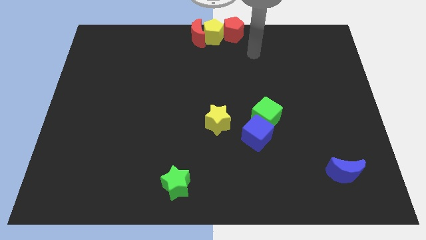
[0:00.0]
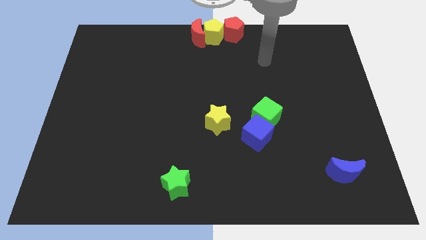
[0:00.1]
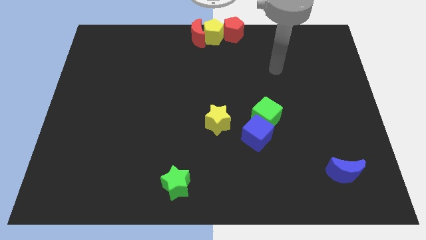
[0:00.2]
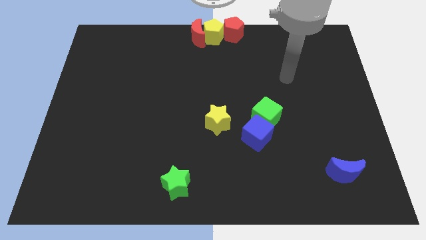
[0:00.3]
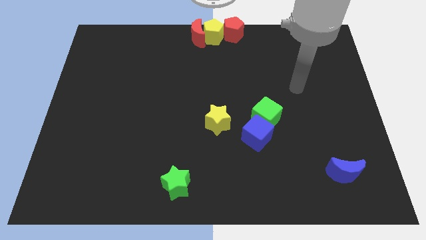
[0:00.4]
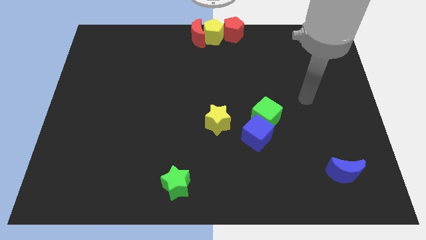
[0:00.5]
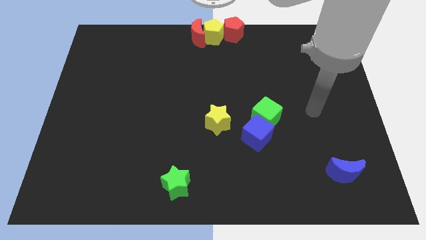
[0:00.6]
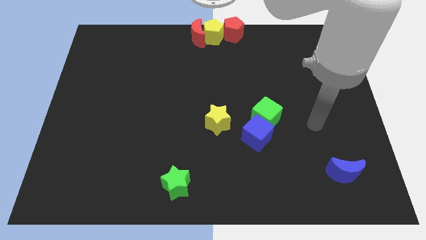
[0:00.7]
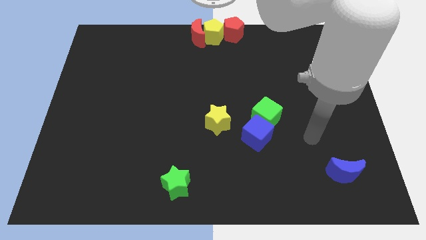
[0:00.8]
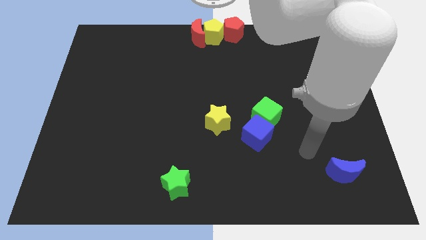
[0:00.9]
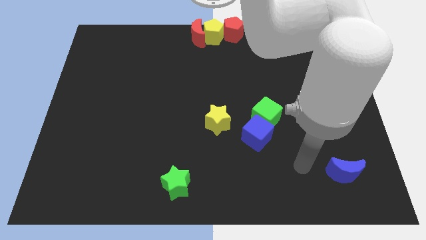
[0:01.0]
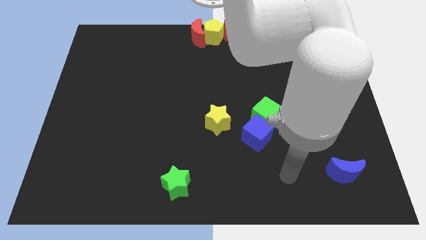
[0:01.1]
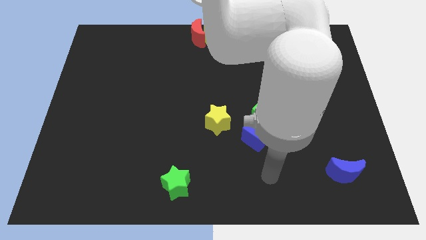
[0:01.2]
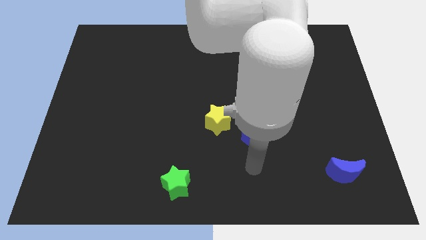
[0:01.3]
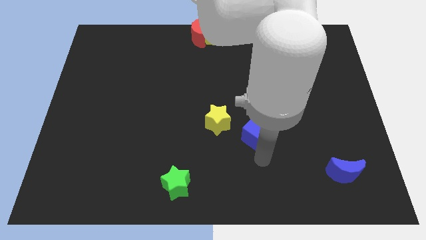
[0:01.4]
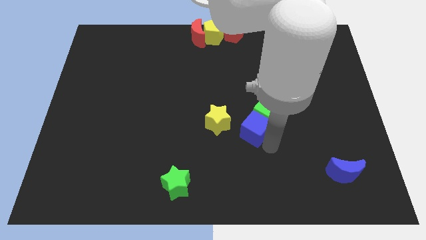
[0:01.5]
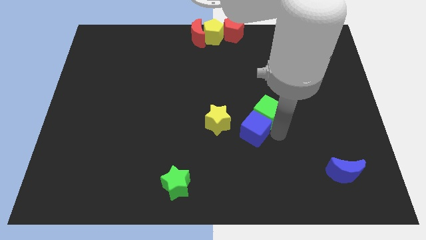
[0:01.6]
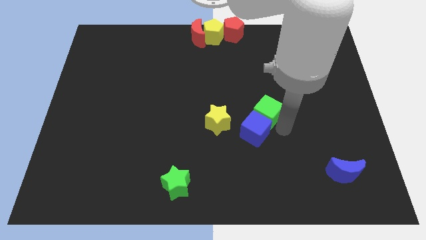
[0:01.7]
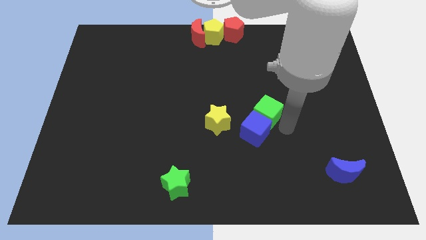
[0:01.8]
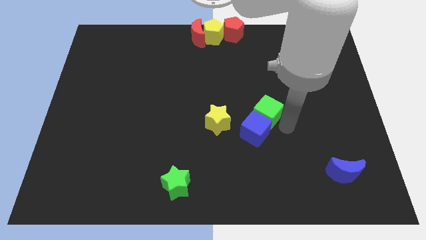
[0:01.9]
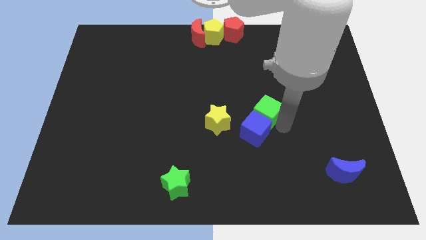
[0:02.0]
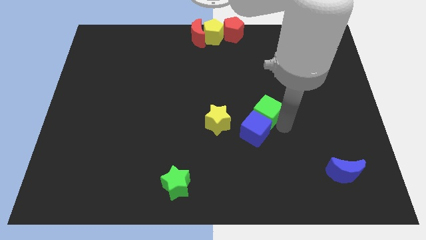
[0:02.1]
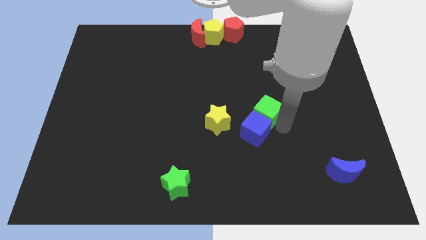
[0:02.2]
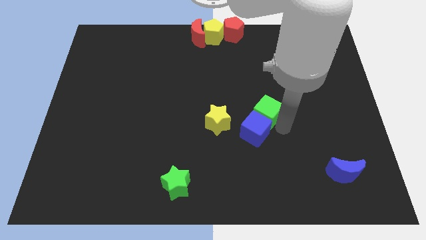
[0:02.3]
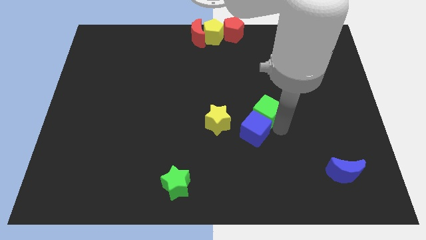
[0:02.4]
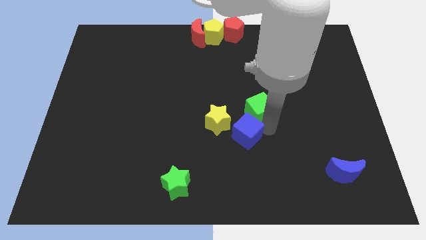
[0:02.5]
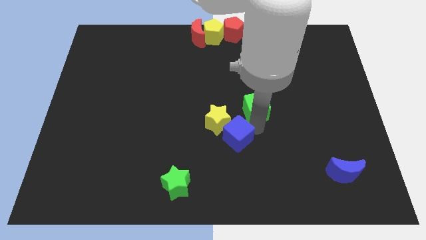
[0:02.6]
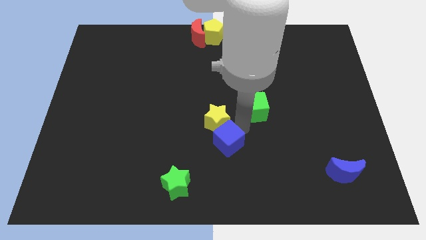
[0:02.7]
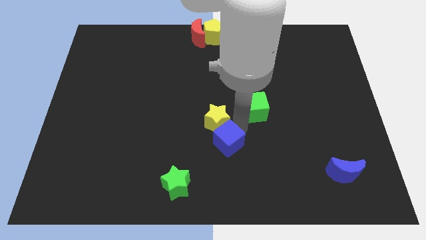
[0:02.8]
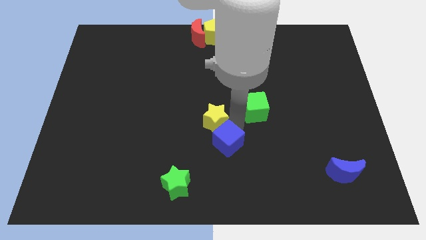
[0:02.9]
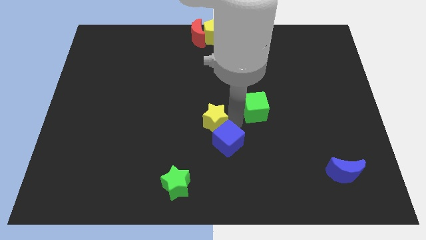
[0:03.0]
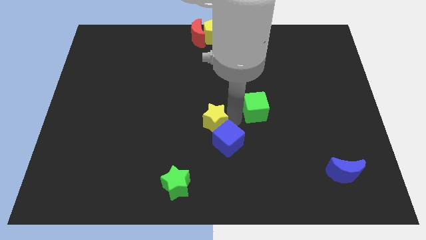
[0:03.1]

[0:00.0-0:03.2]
separate blue cube and the green cube

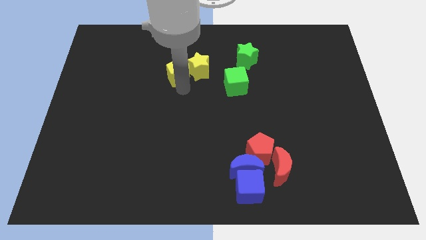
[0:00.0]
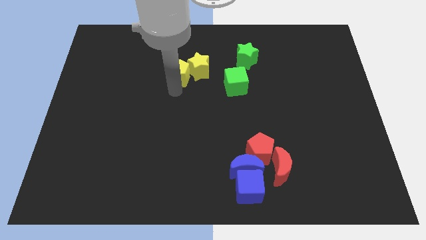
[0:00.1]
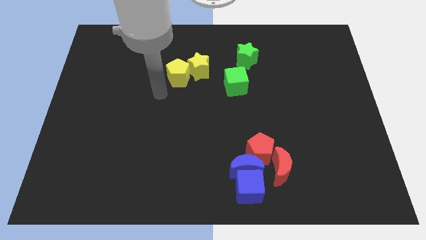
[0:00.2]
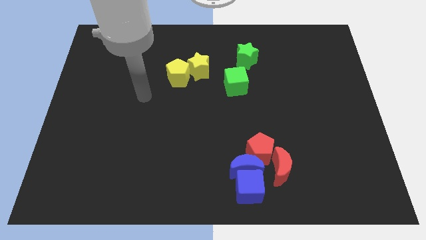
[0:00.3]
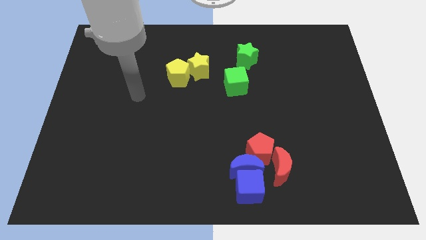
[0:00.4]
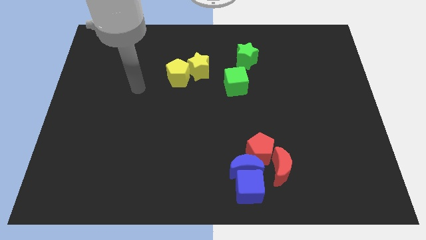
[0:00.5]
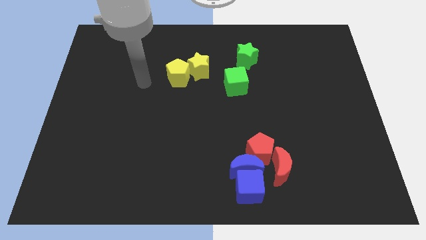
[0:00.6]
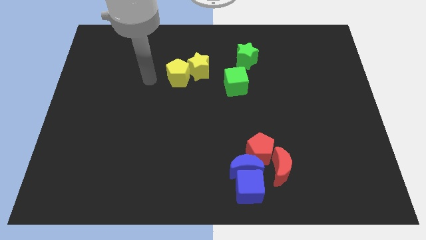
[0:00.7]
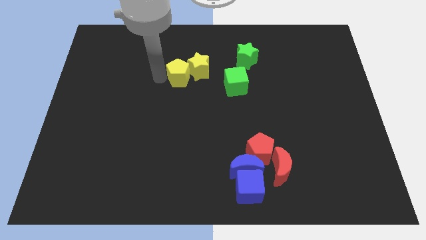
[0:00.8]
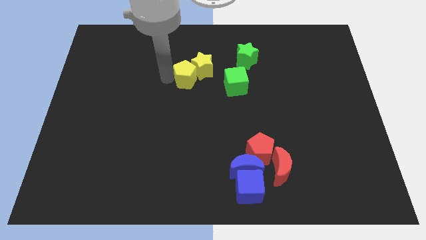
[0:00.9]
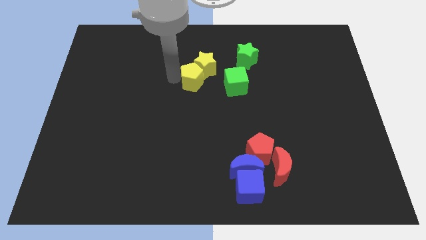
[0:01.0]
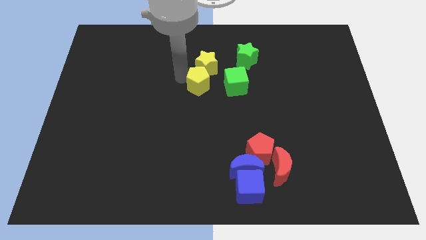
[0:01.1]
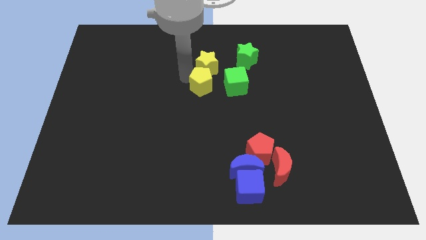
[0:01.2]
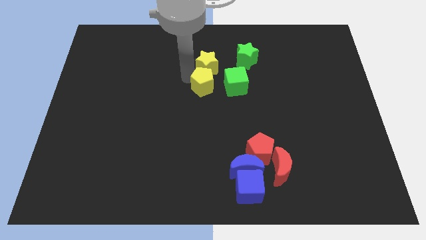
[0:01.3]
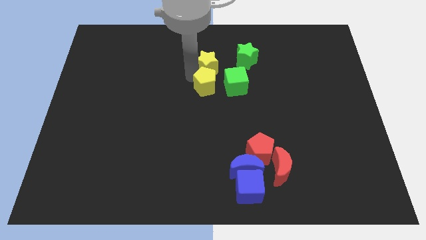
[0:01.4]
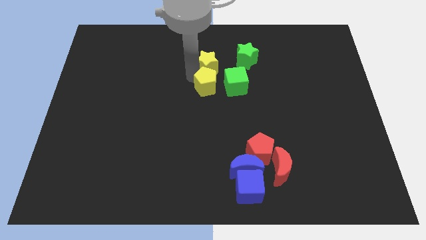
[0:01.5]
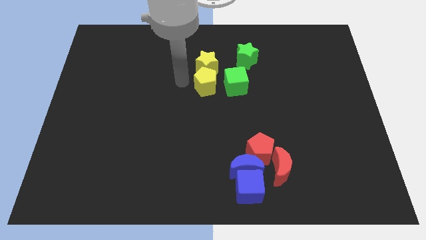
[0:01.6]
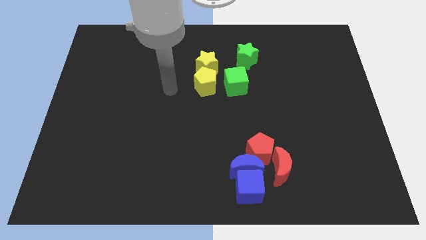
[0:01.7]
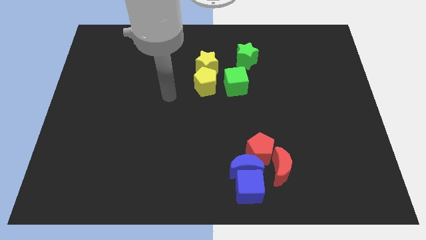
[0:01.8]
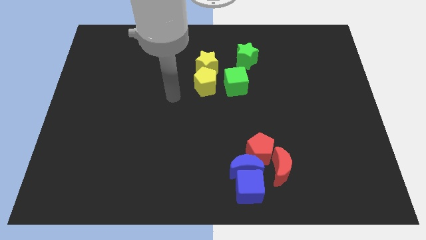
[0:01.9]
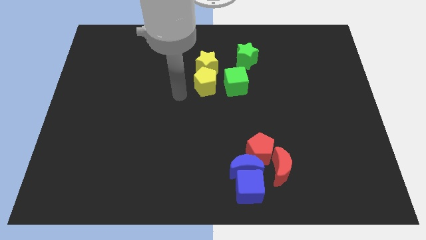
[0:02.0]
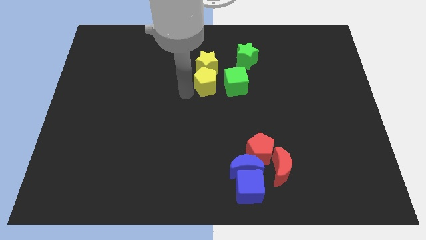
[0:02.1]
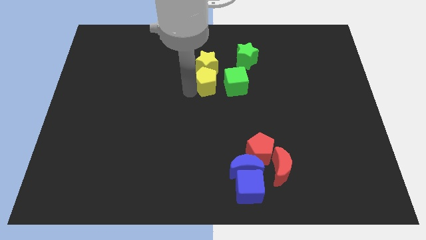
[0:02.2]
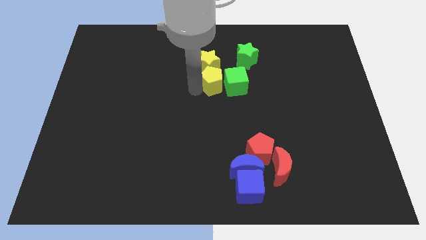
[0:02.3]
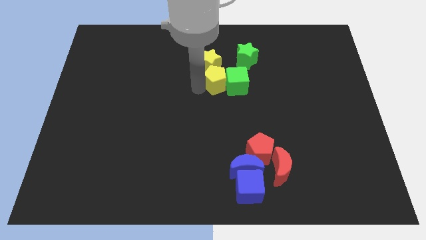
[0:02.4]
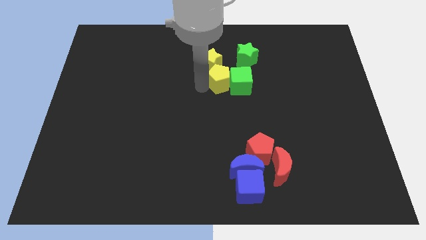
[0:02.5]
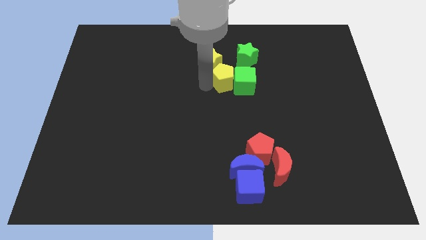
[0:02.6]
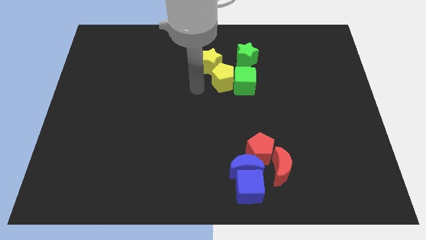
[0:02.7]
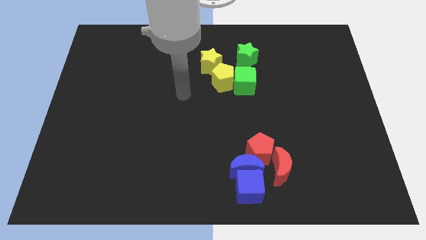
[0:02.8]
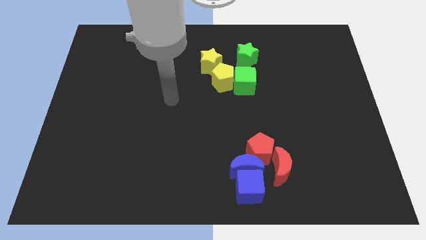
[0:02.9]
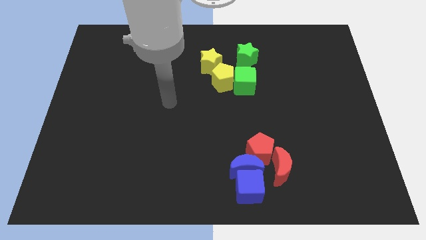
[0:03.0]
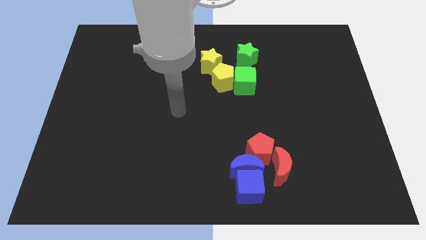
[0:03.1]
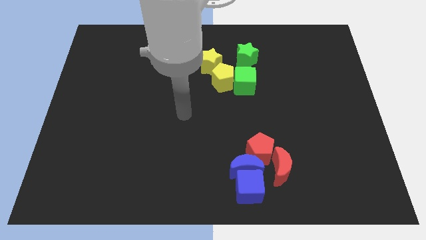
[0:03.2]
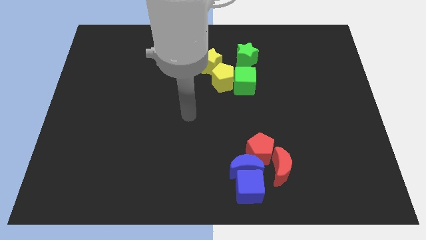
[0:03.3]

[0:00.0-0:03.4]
push the yellow pentagon into the green cube

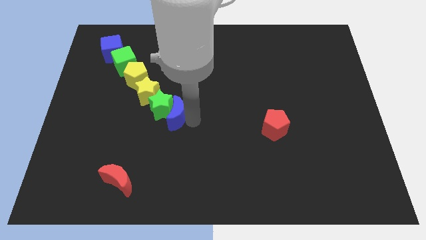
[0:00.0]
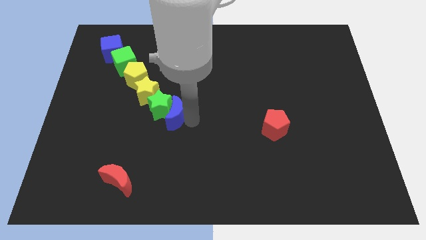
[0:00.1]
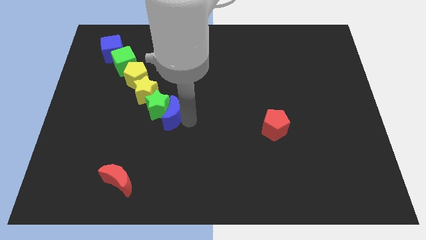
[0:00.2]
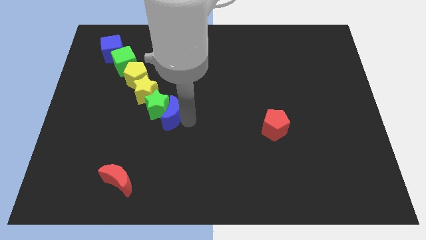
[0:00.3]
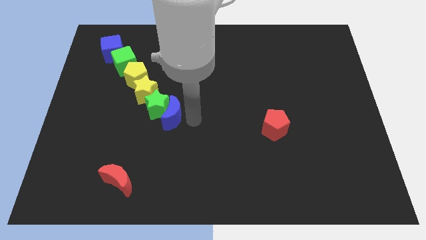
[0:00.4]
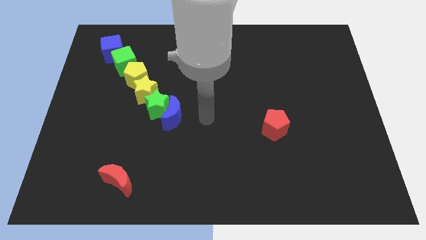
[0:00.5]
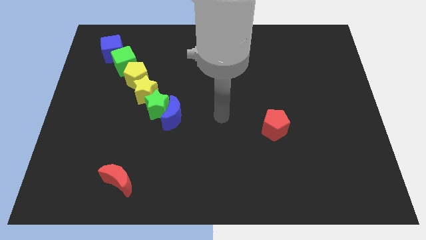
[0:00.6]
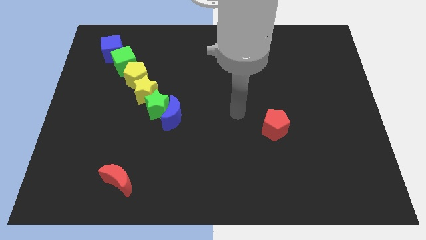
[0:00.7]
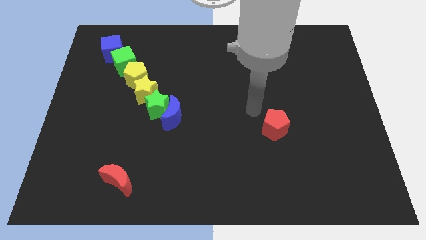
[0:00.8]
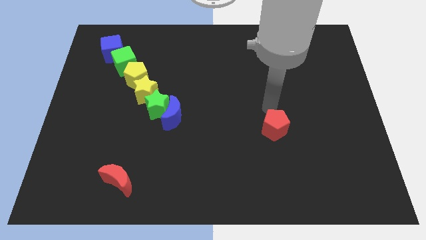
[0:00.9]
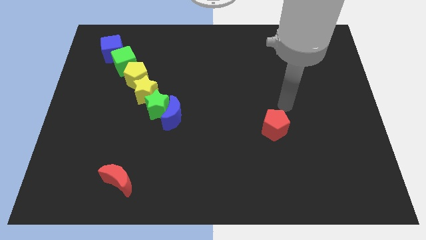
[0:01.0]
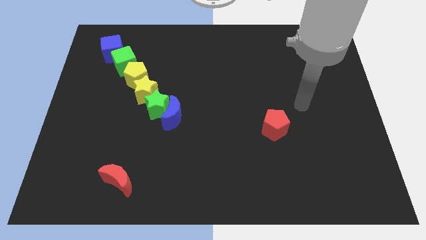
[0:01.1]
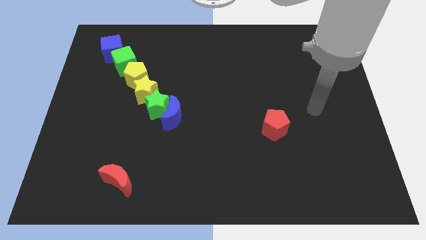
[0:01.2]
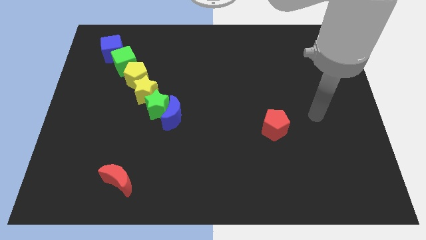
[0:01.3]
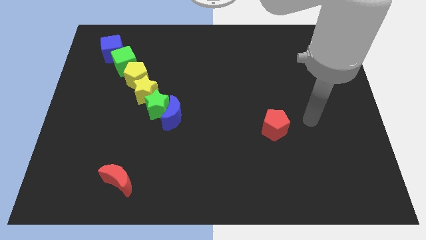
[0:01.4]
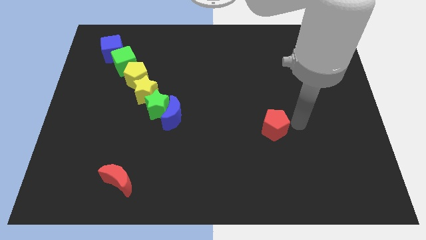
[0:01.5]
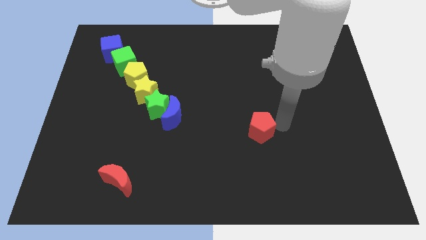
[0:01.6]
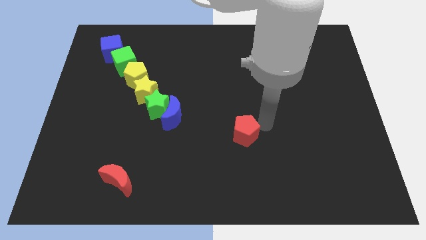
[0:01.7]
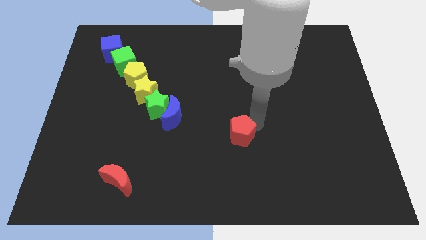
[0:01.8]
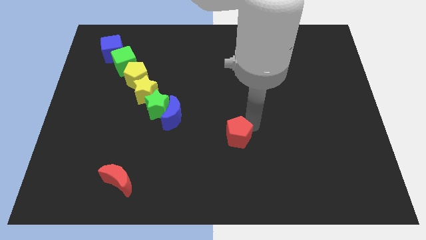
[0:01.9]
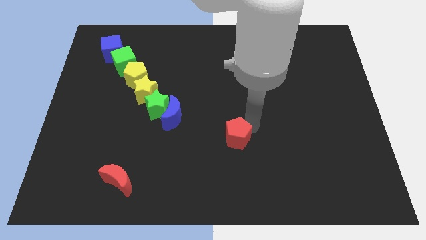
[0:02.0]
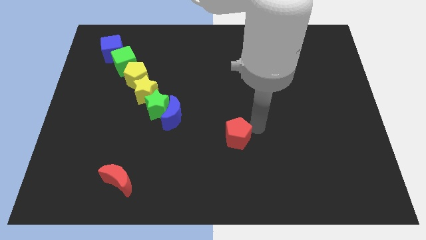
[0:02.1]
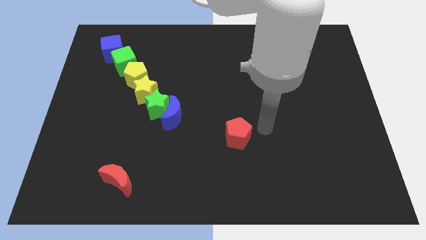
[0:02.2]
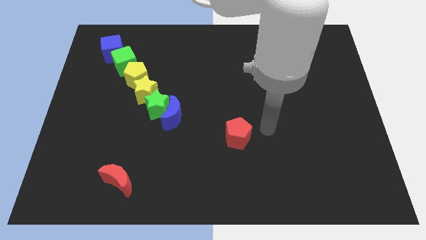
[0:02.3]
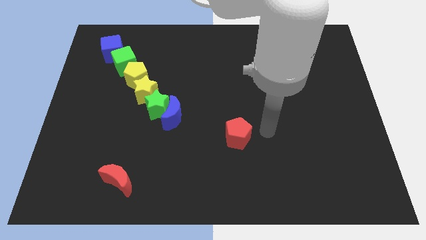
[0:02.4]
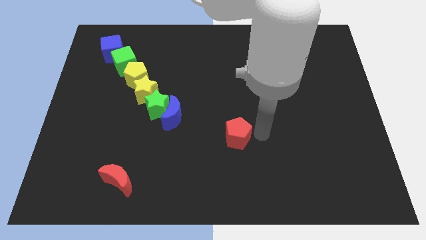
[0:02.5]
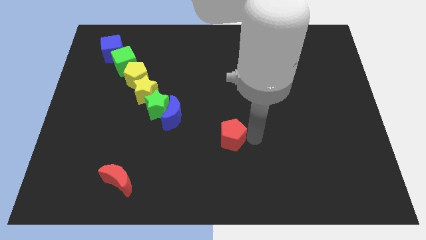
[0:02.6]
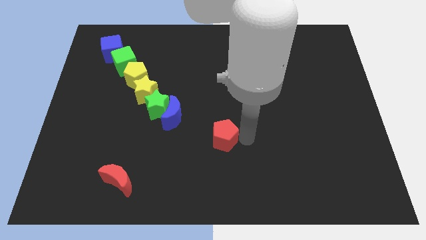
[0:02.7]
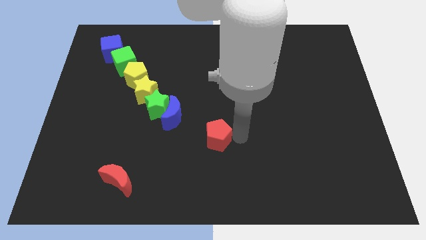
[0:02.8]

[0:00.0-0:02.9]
move the red pentagon towards the bottom
